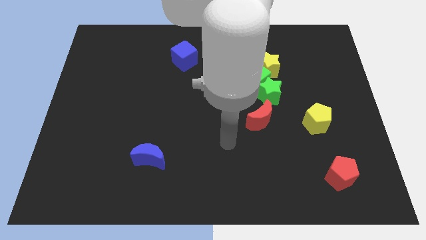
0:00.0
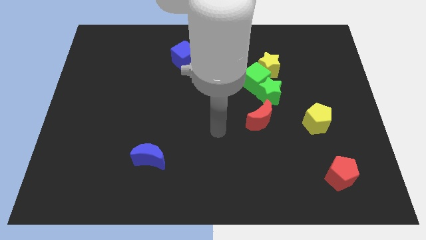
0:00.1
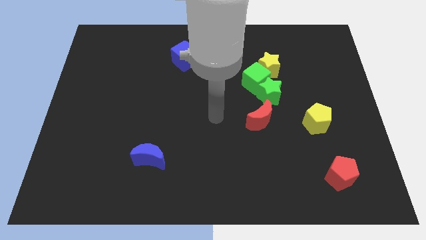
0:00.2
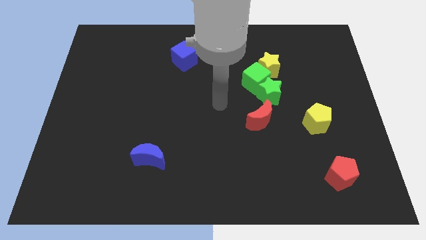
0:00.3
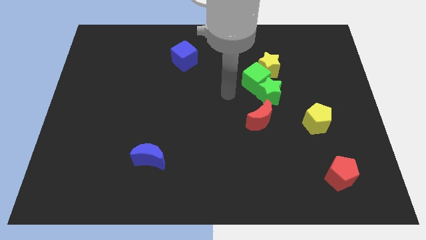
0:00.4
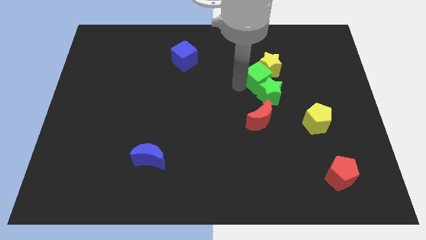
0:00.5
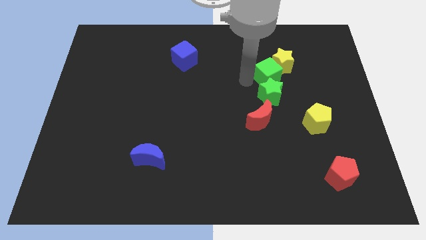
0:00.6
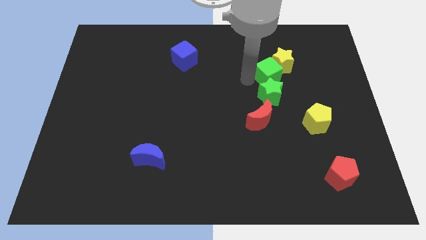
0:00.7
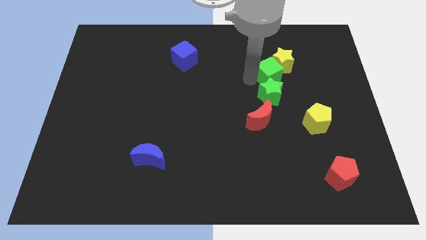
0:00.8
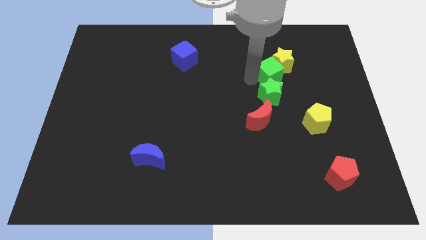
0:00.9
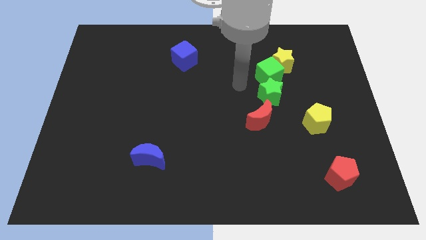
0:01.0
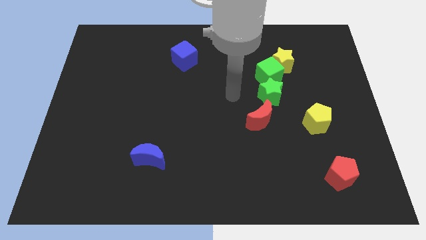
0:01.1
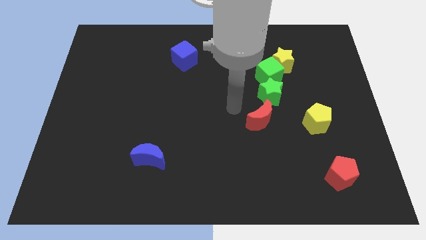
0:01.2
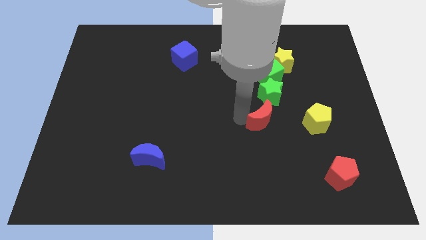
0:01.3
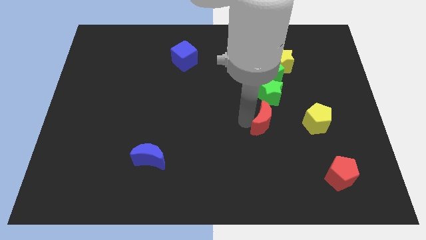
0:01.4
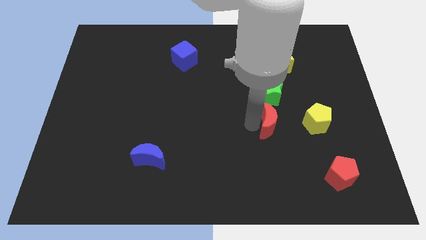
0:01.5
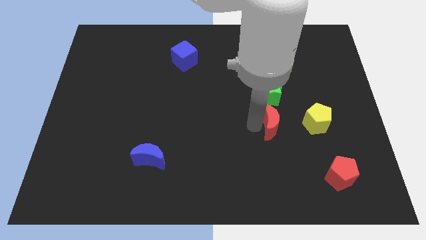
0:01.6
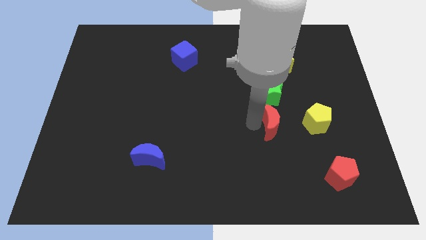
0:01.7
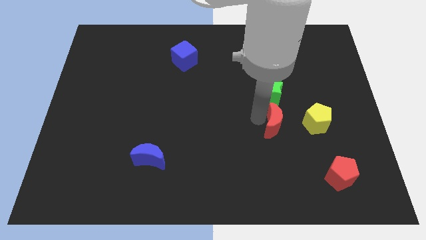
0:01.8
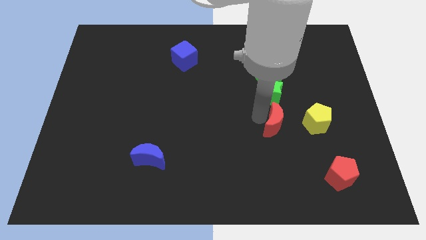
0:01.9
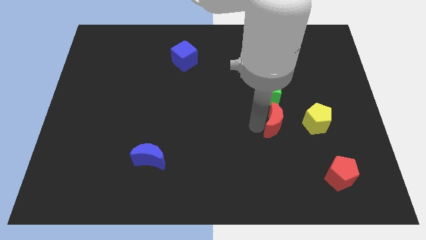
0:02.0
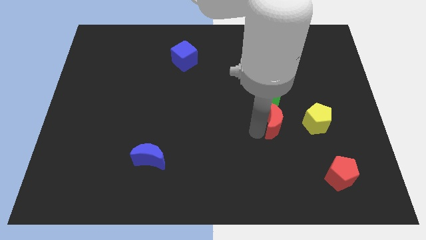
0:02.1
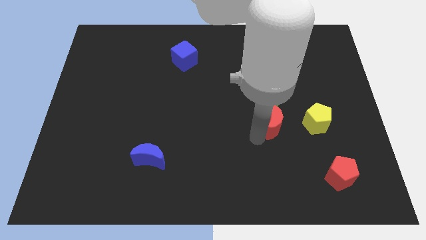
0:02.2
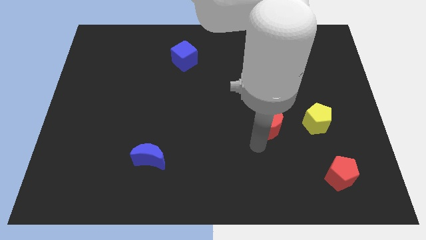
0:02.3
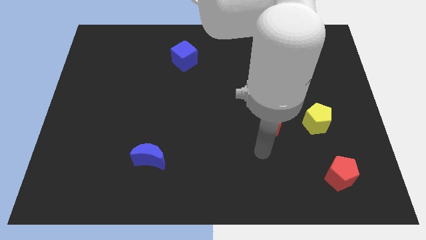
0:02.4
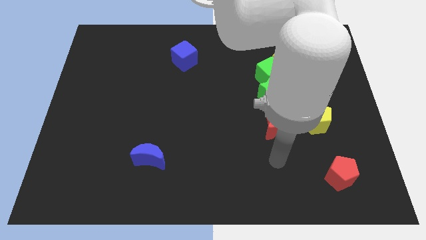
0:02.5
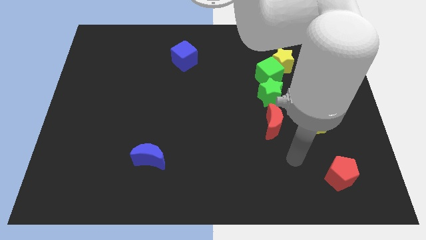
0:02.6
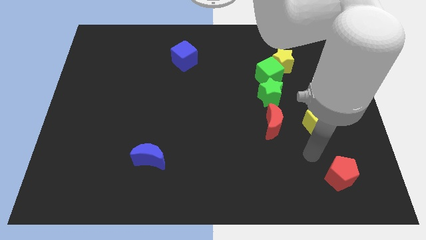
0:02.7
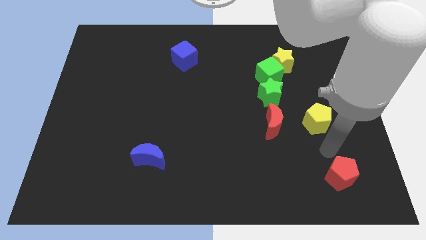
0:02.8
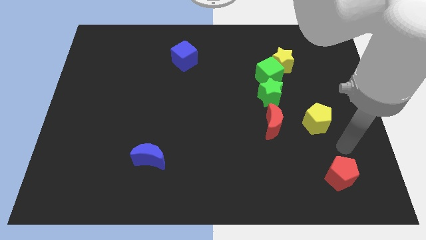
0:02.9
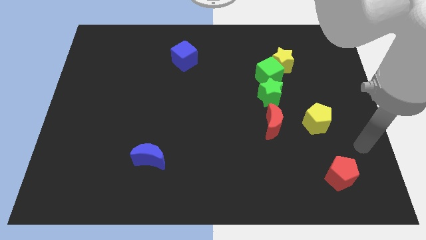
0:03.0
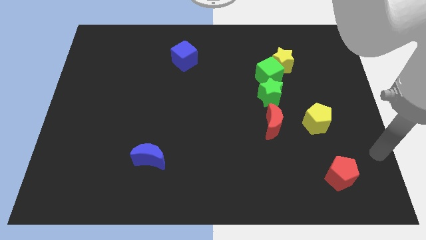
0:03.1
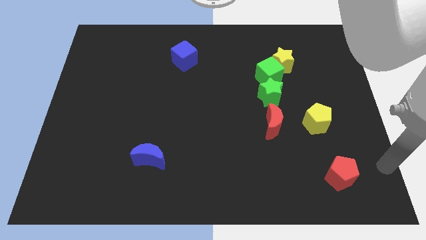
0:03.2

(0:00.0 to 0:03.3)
adjust green cube and red moon with other blocks to form a line

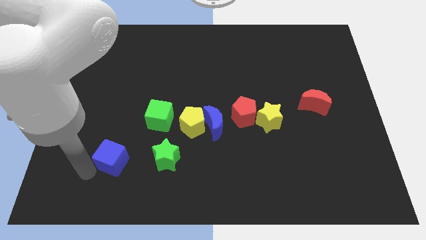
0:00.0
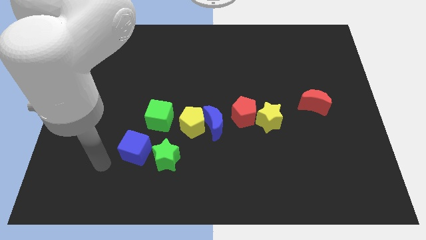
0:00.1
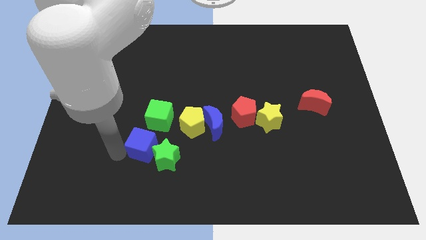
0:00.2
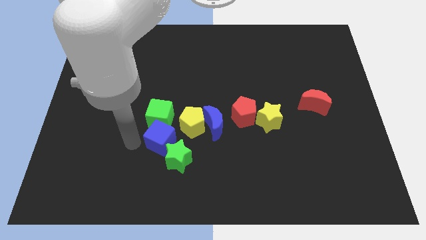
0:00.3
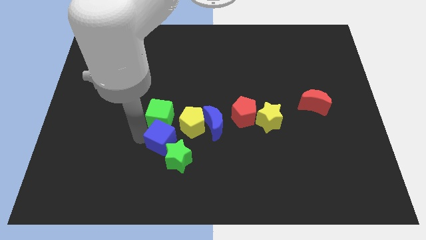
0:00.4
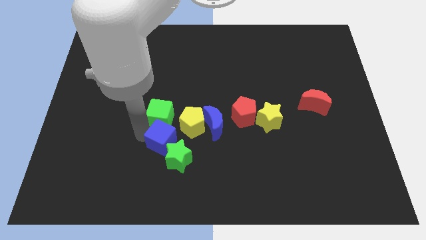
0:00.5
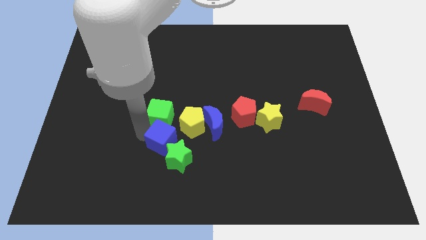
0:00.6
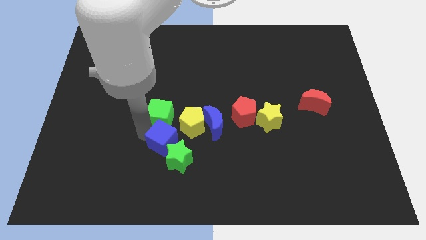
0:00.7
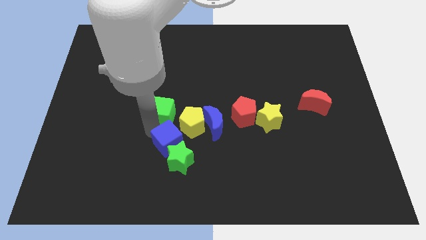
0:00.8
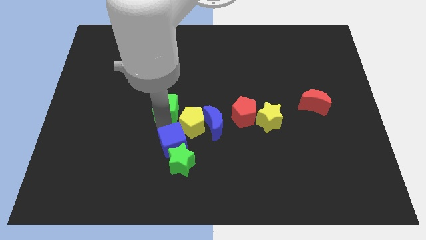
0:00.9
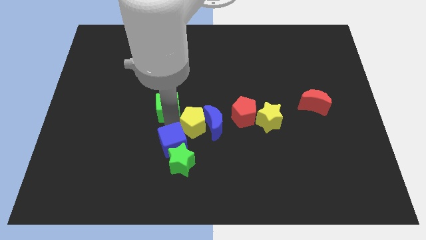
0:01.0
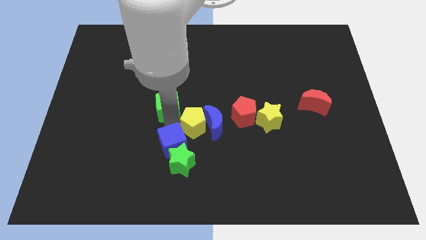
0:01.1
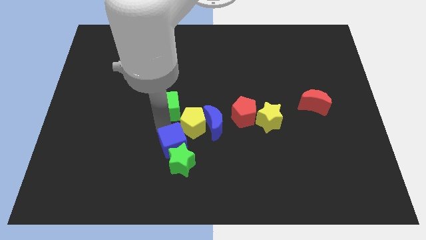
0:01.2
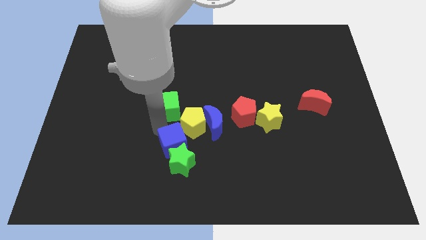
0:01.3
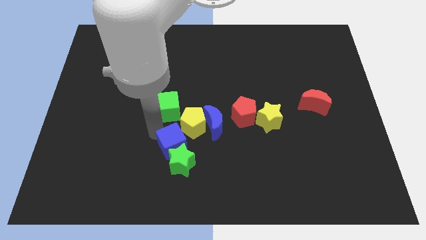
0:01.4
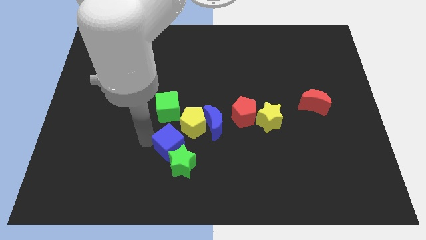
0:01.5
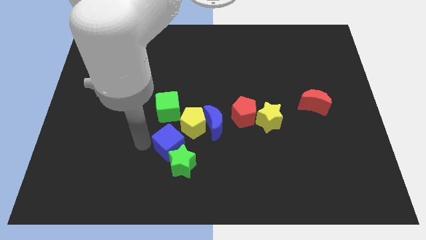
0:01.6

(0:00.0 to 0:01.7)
push the blue block above the green star

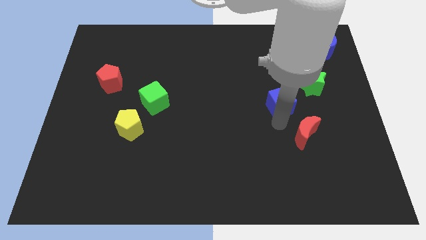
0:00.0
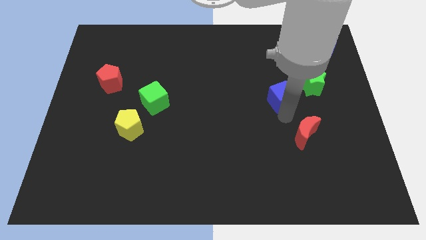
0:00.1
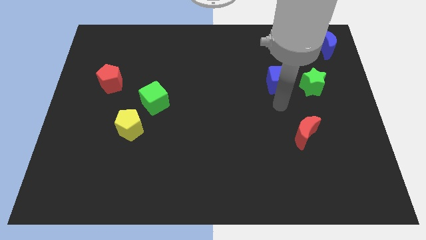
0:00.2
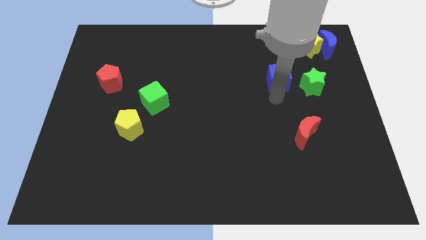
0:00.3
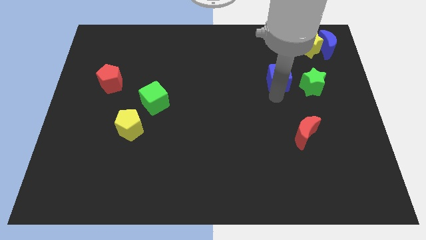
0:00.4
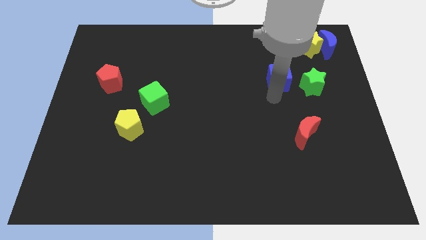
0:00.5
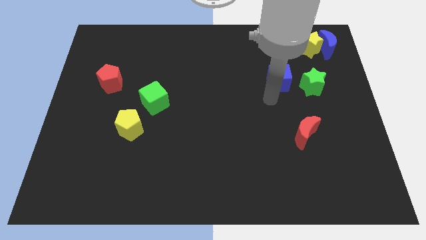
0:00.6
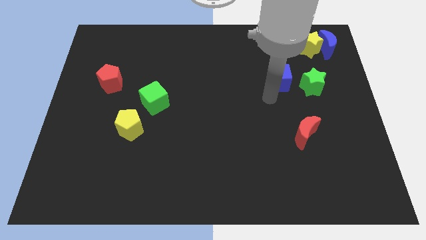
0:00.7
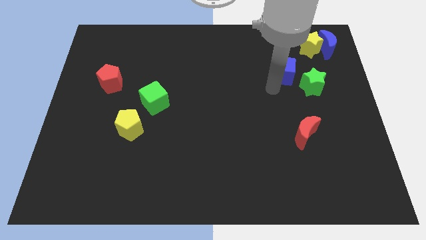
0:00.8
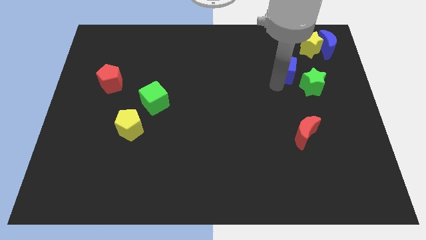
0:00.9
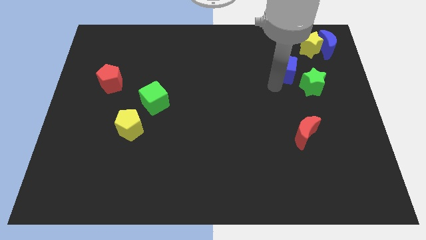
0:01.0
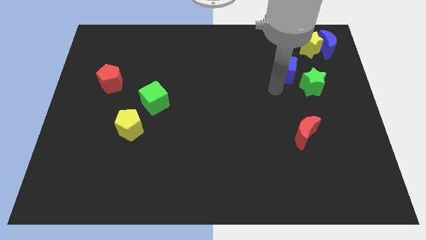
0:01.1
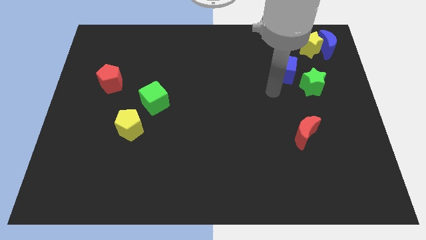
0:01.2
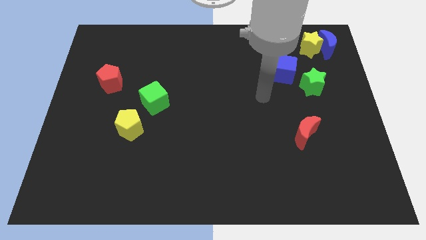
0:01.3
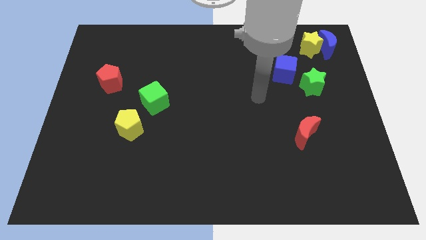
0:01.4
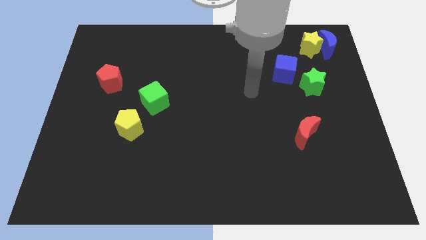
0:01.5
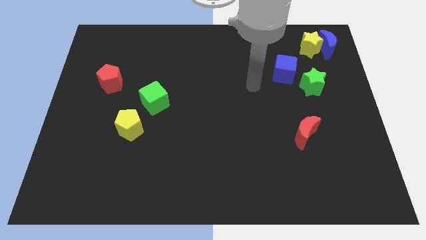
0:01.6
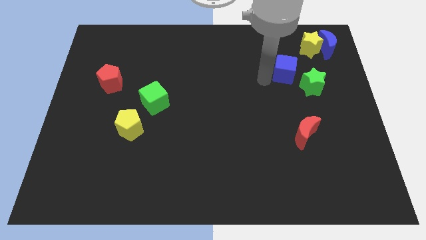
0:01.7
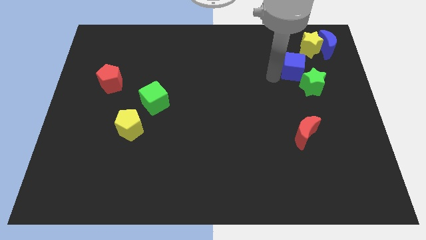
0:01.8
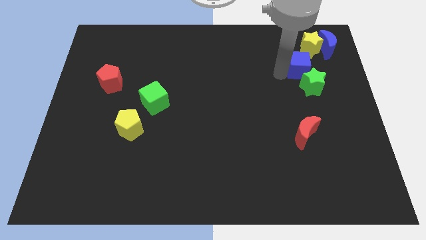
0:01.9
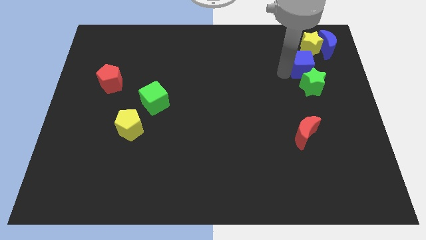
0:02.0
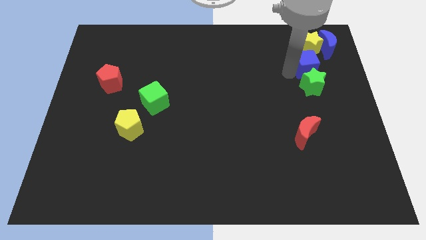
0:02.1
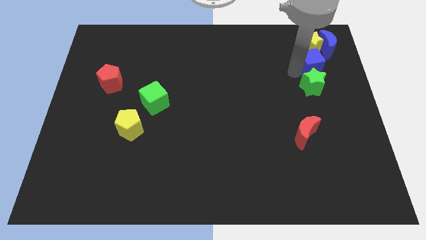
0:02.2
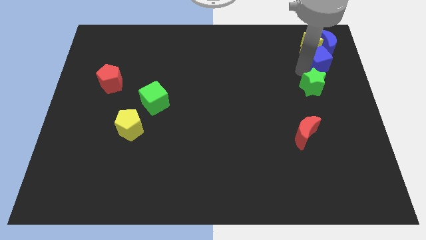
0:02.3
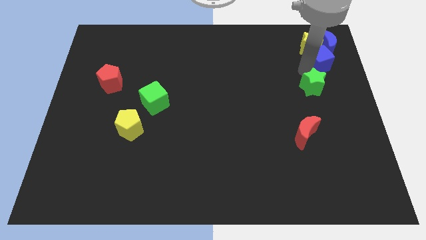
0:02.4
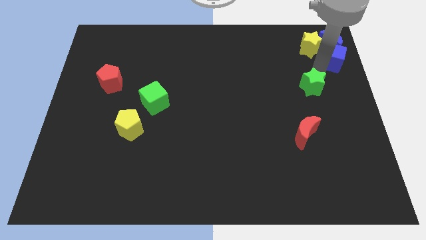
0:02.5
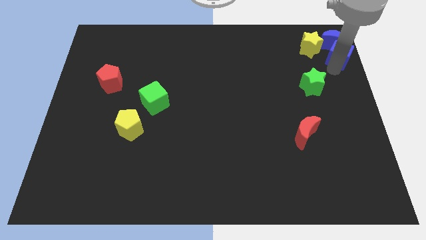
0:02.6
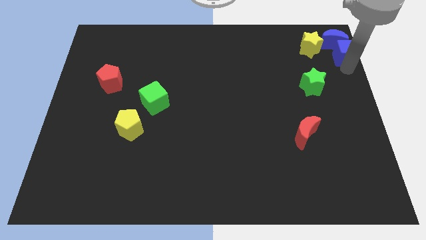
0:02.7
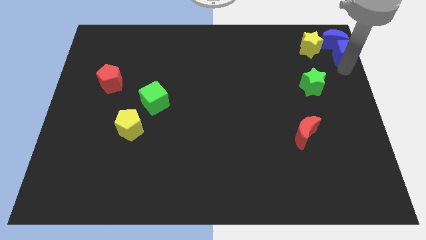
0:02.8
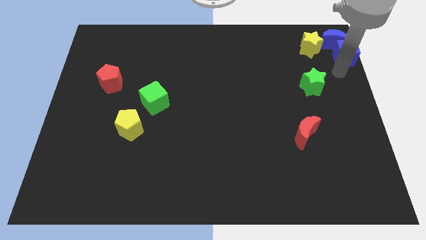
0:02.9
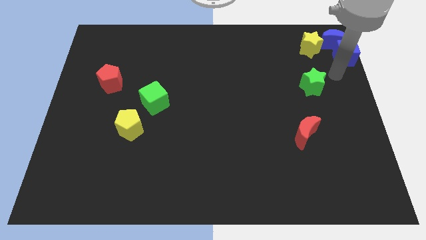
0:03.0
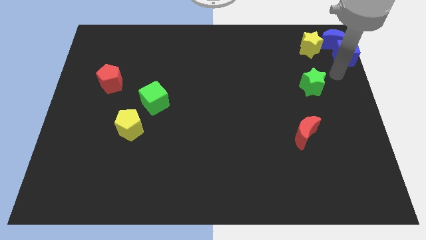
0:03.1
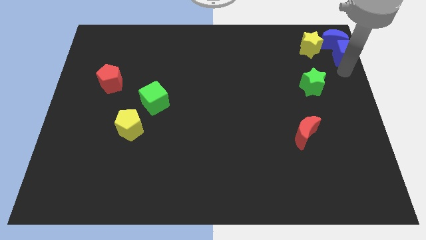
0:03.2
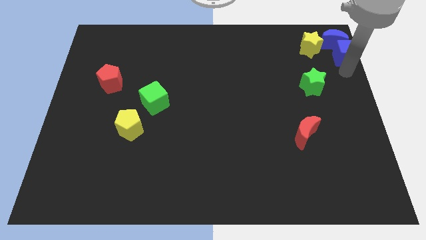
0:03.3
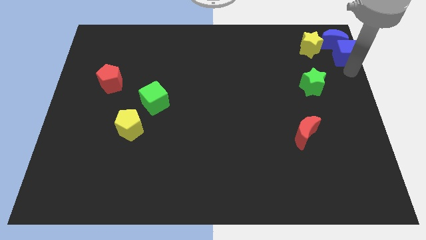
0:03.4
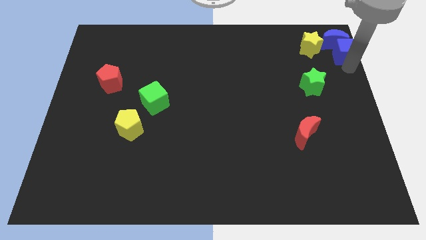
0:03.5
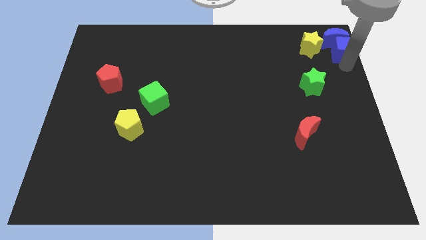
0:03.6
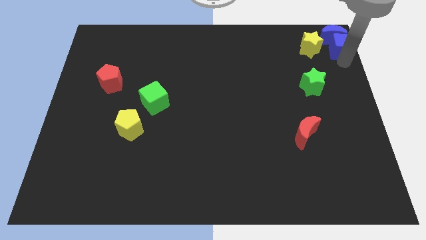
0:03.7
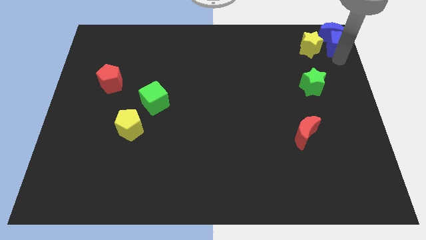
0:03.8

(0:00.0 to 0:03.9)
move the blue cube into the blue moon

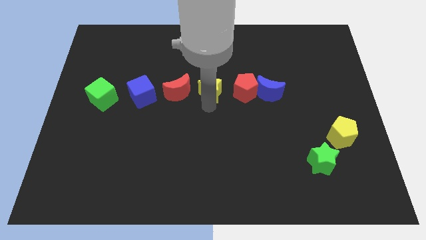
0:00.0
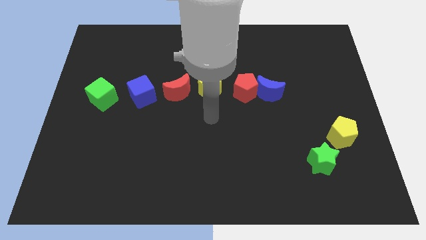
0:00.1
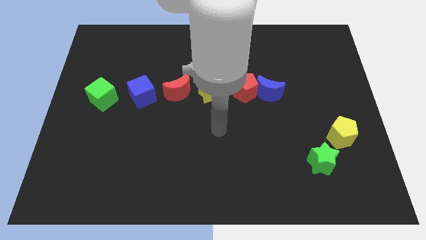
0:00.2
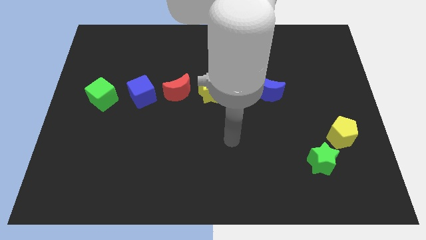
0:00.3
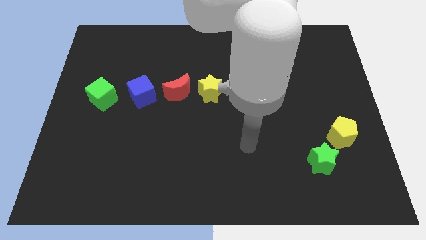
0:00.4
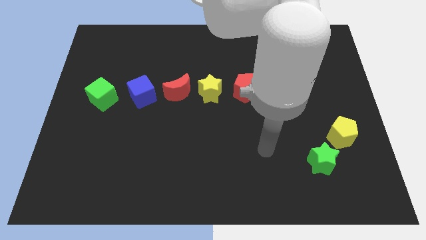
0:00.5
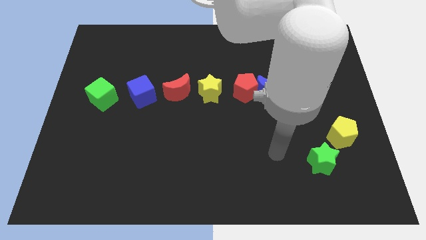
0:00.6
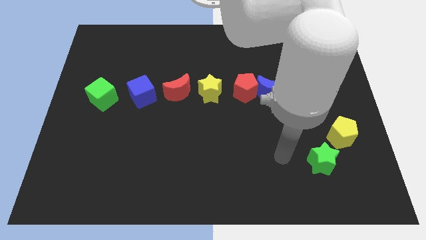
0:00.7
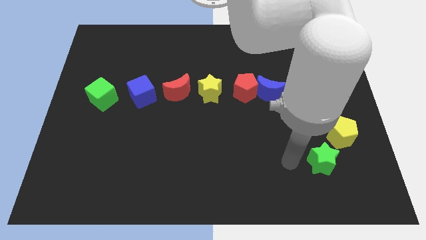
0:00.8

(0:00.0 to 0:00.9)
move the arm away from the yellow star
